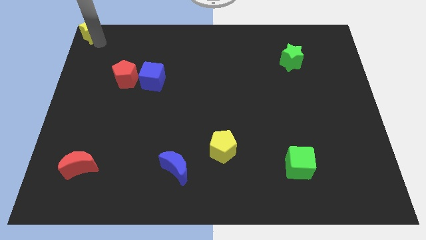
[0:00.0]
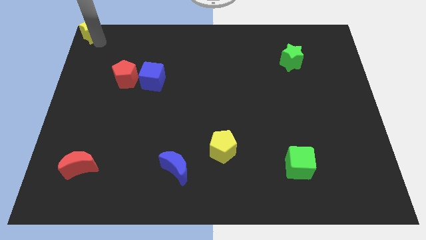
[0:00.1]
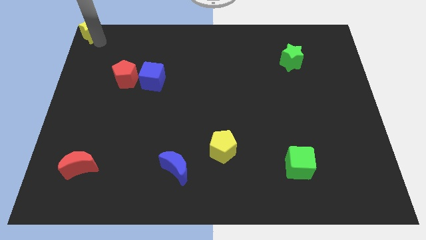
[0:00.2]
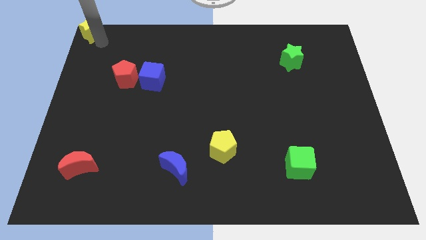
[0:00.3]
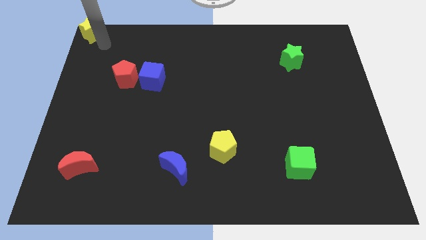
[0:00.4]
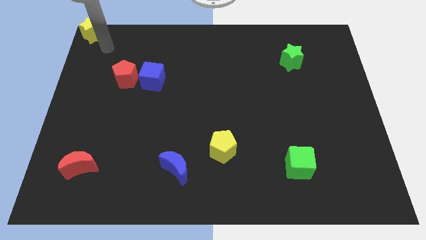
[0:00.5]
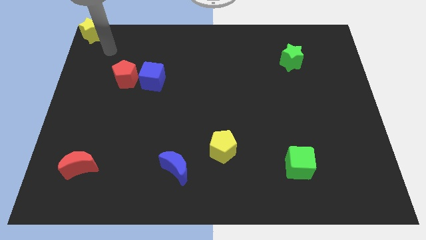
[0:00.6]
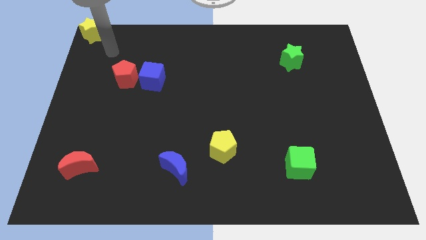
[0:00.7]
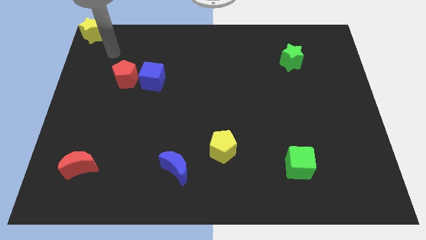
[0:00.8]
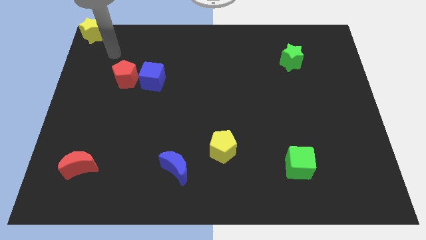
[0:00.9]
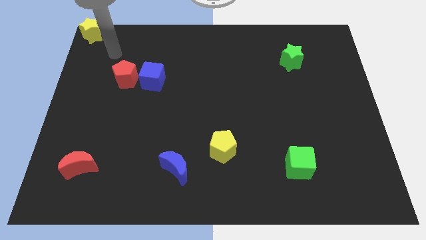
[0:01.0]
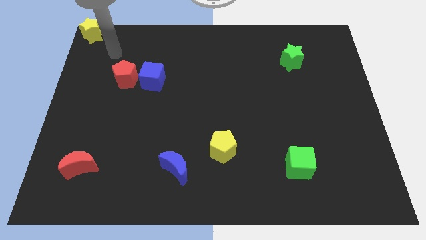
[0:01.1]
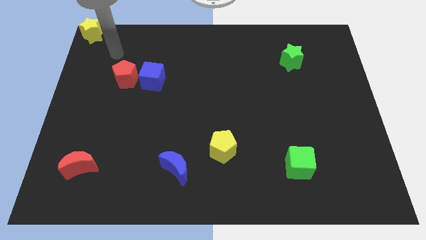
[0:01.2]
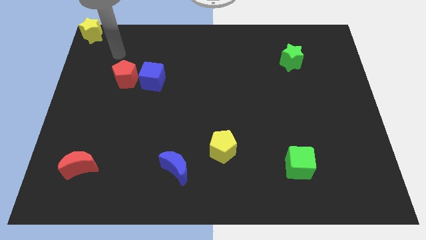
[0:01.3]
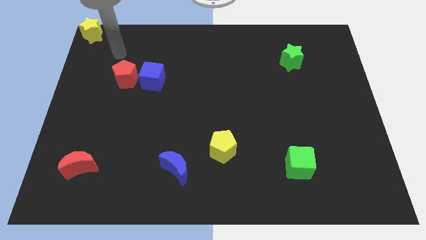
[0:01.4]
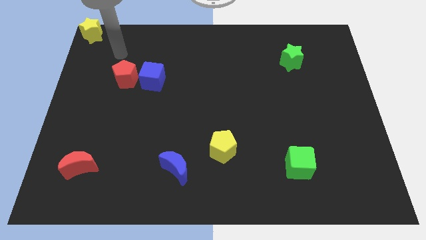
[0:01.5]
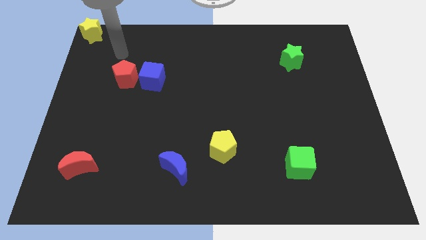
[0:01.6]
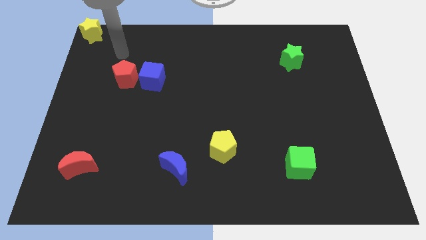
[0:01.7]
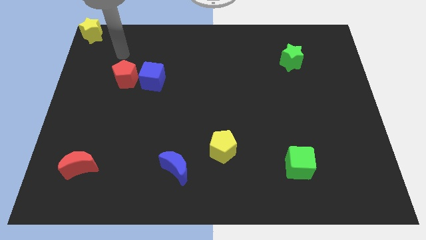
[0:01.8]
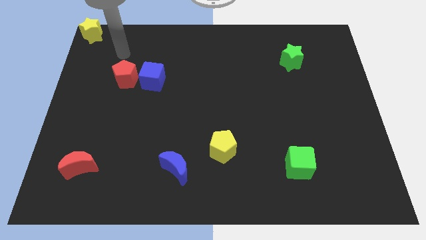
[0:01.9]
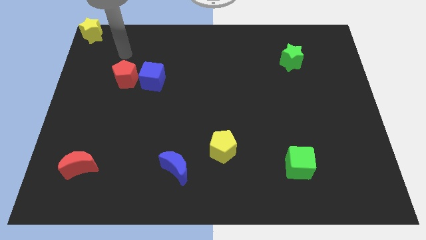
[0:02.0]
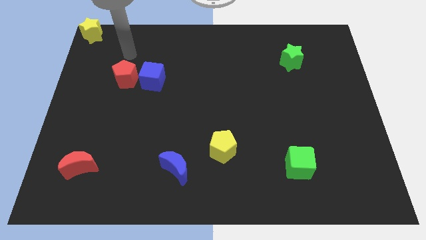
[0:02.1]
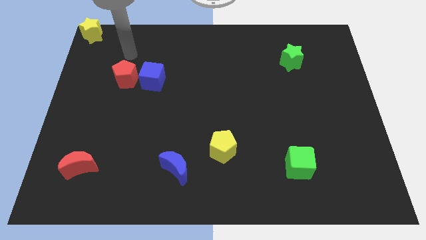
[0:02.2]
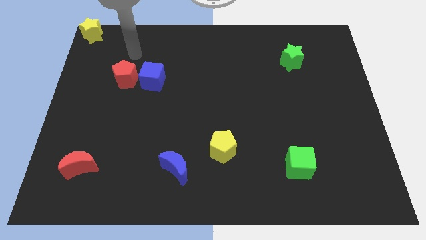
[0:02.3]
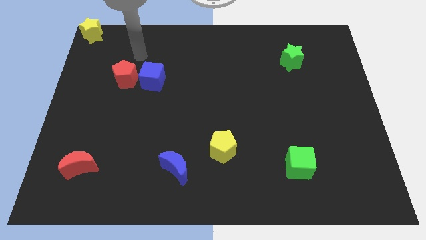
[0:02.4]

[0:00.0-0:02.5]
point the arm on top of red pentagon

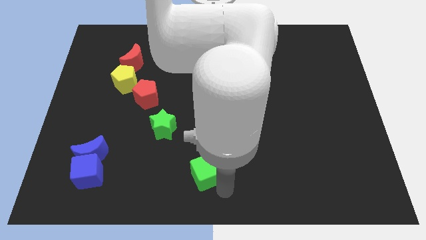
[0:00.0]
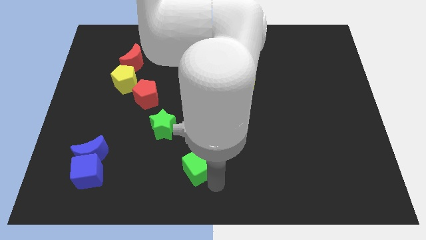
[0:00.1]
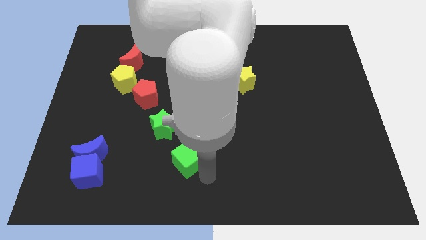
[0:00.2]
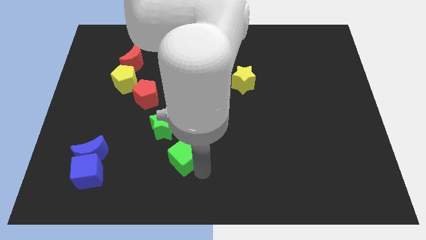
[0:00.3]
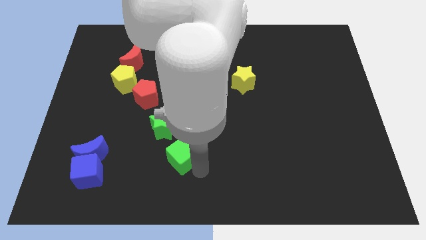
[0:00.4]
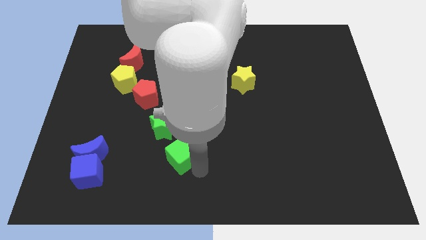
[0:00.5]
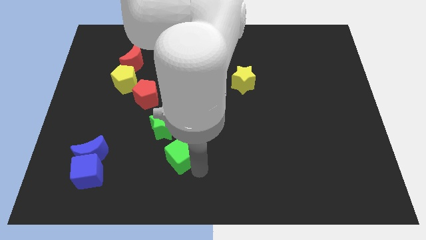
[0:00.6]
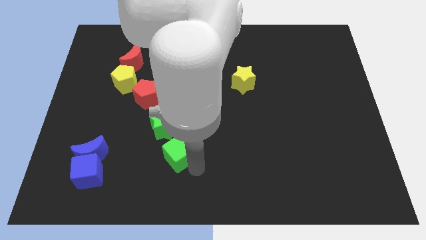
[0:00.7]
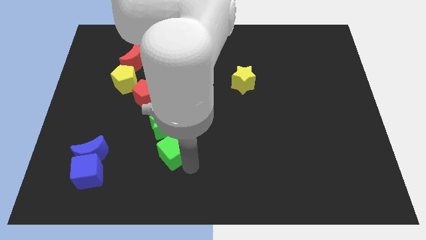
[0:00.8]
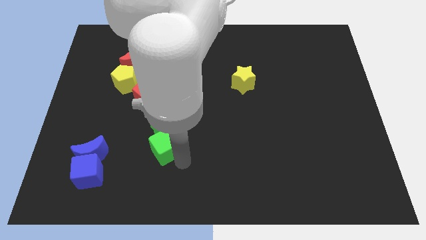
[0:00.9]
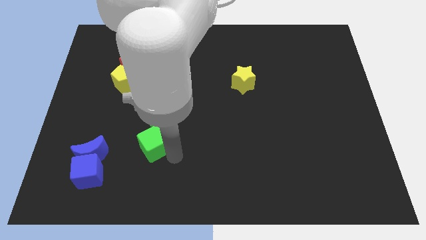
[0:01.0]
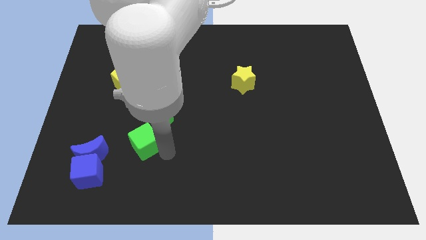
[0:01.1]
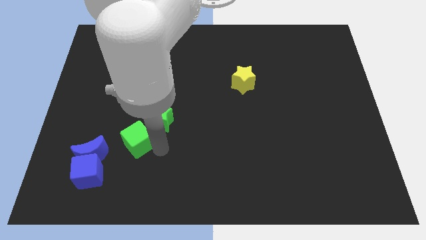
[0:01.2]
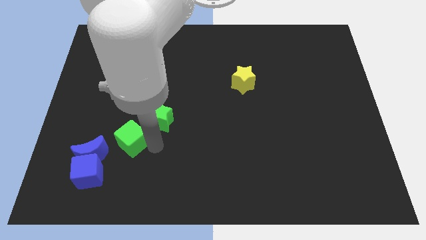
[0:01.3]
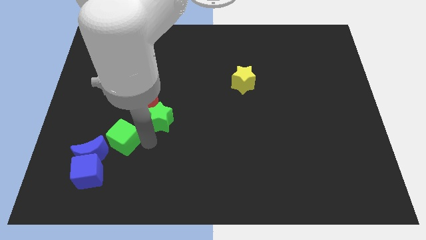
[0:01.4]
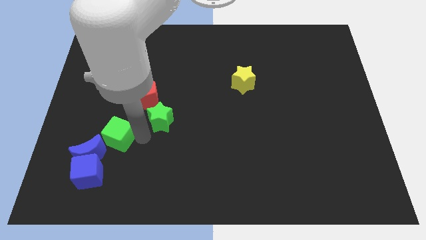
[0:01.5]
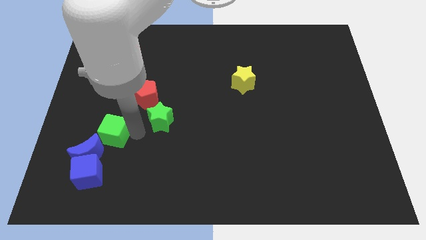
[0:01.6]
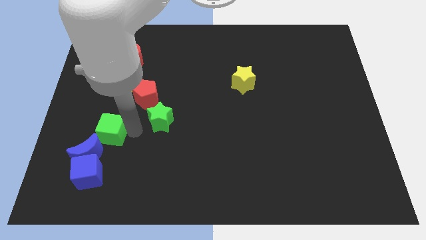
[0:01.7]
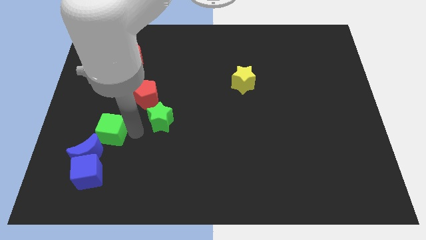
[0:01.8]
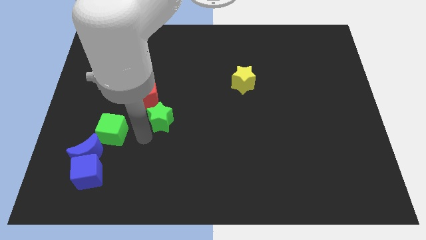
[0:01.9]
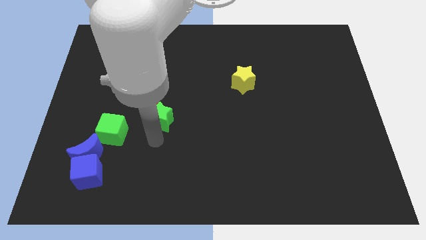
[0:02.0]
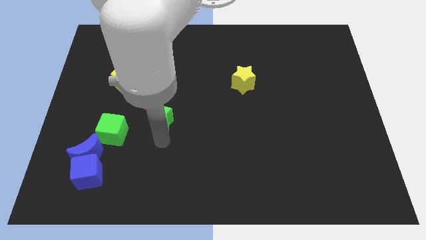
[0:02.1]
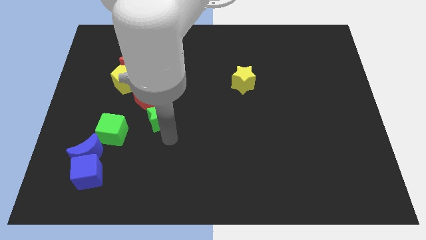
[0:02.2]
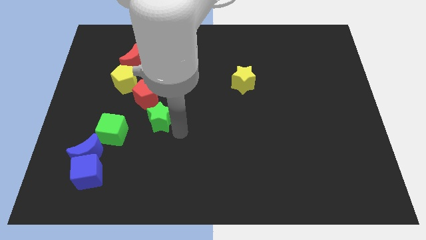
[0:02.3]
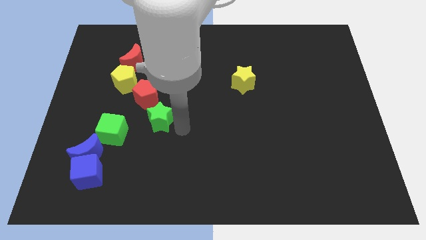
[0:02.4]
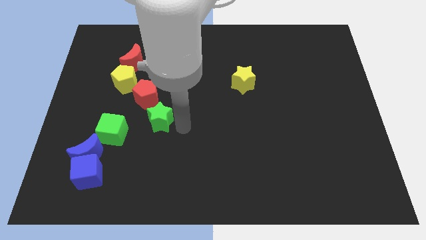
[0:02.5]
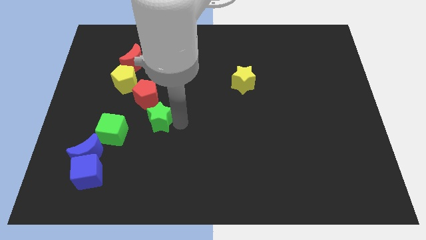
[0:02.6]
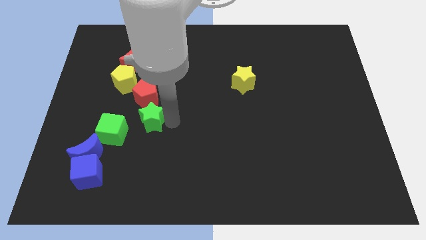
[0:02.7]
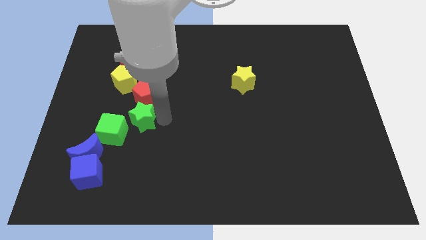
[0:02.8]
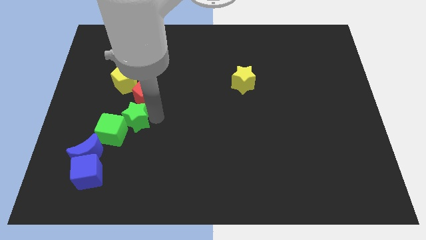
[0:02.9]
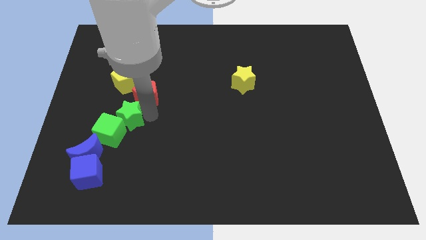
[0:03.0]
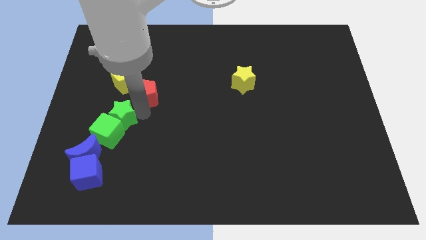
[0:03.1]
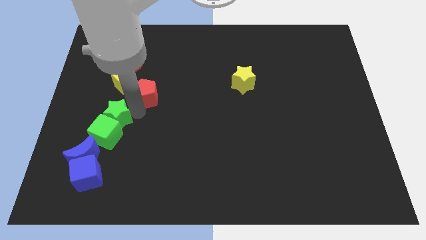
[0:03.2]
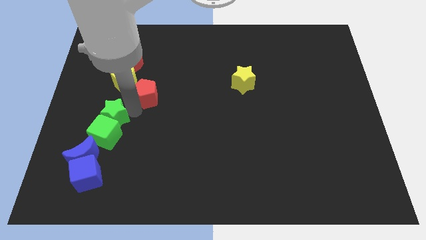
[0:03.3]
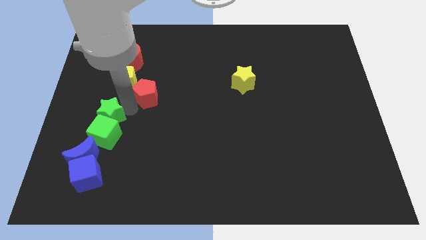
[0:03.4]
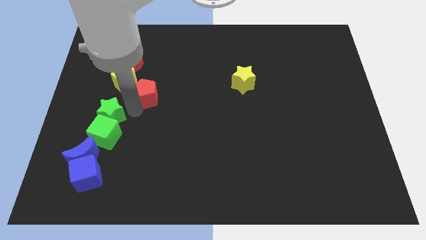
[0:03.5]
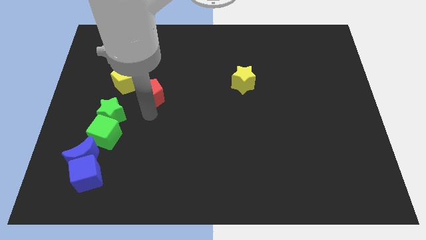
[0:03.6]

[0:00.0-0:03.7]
move the green star and green cube on top of the blue moon

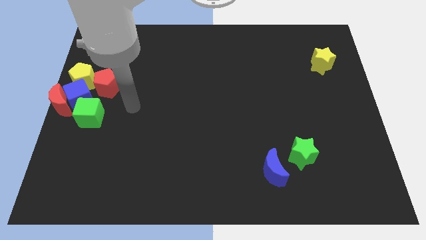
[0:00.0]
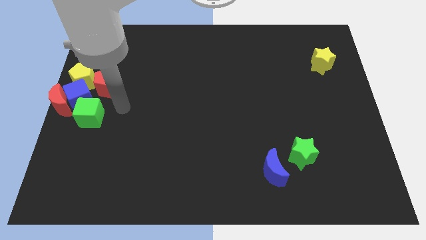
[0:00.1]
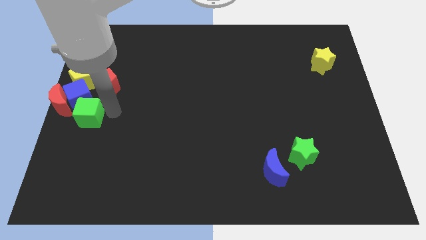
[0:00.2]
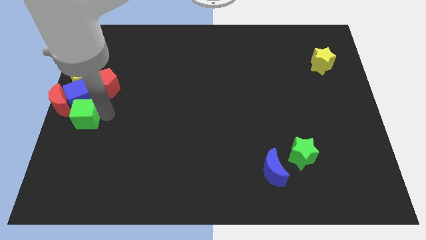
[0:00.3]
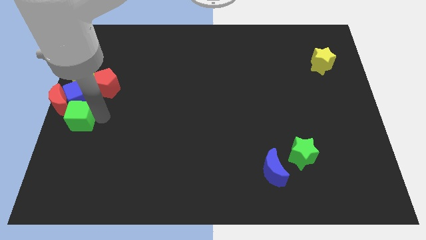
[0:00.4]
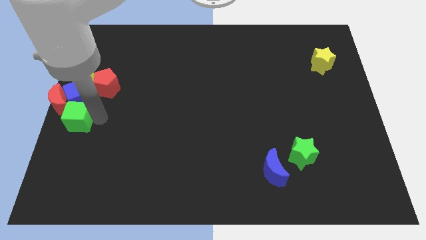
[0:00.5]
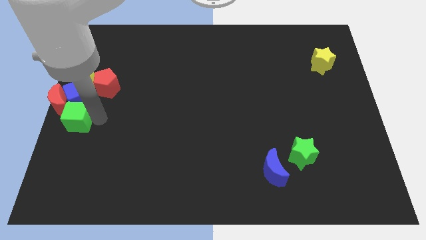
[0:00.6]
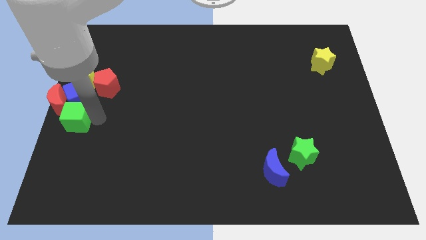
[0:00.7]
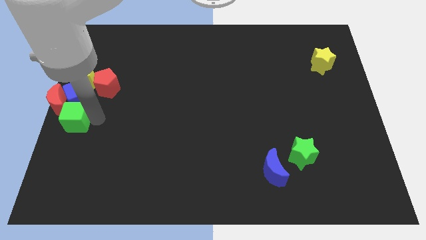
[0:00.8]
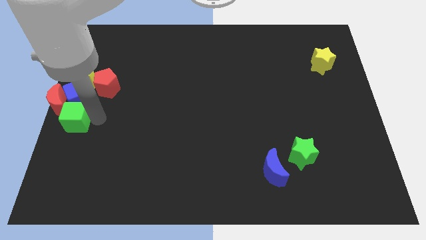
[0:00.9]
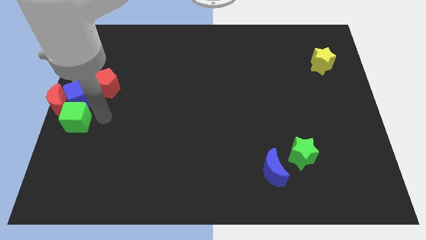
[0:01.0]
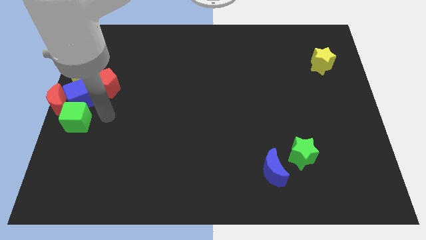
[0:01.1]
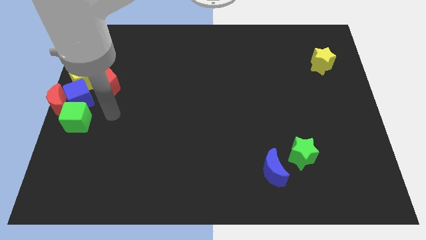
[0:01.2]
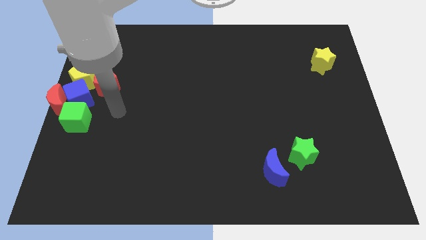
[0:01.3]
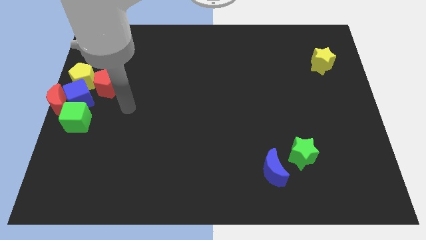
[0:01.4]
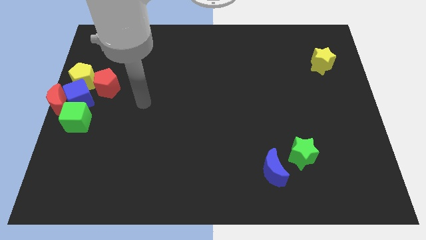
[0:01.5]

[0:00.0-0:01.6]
move the green cube to the bottom of the red crescent

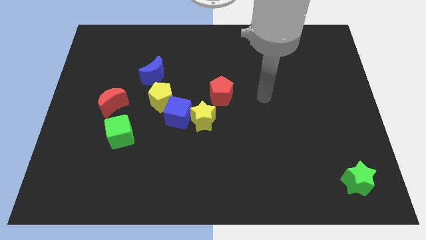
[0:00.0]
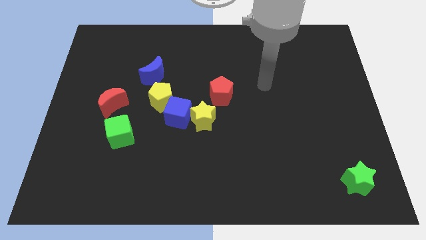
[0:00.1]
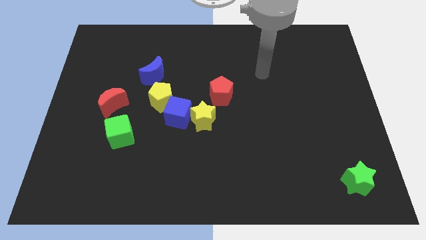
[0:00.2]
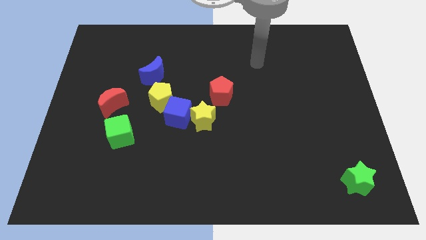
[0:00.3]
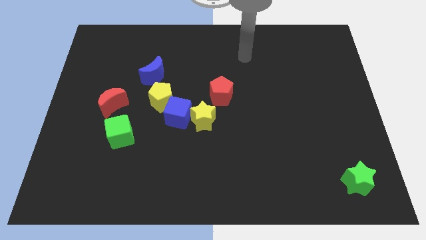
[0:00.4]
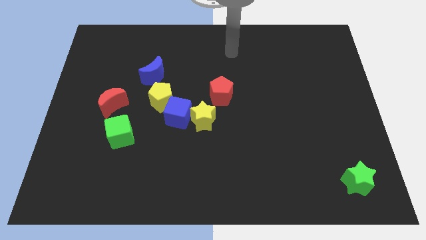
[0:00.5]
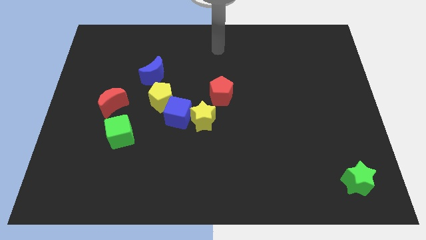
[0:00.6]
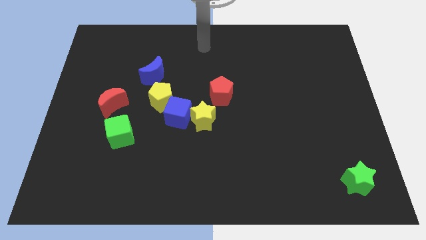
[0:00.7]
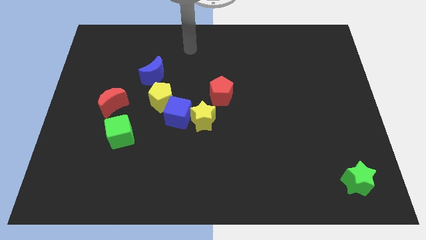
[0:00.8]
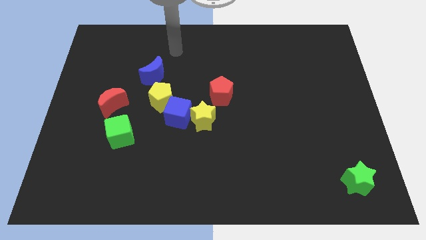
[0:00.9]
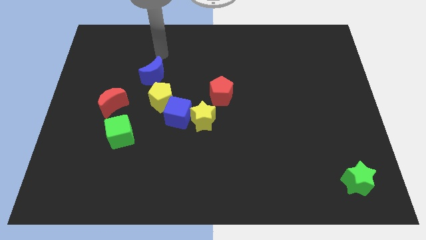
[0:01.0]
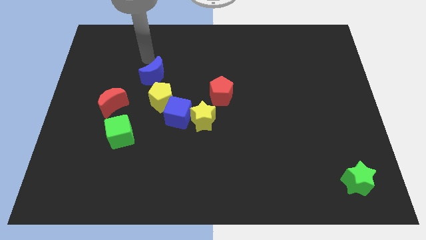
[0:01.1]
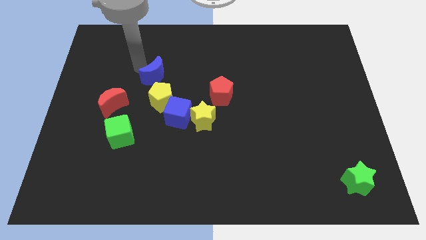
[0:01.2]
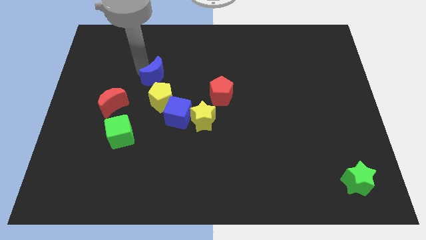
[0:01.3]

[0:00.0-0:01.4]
move your arm to the blue crescent
